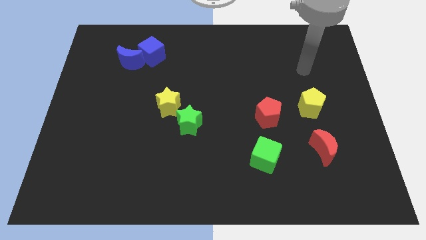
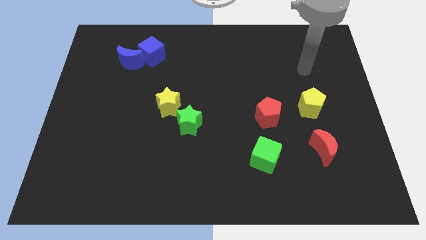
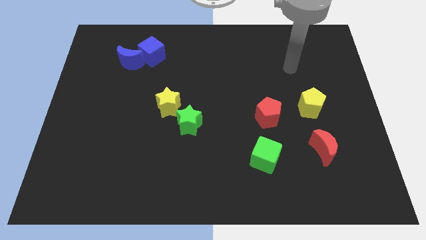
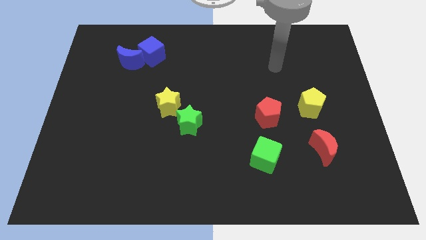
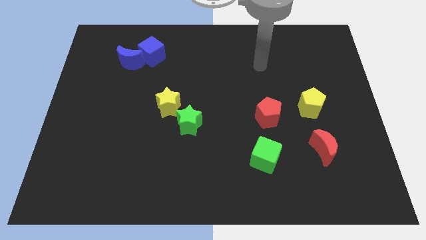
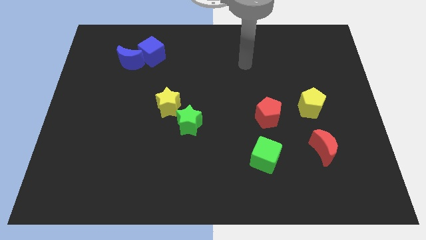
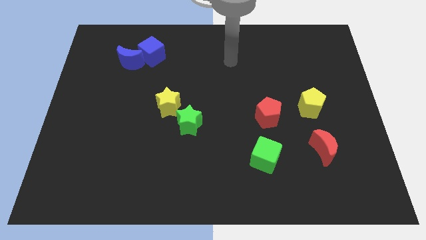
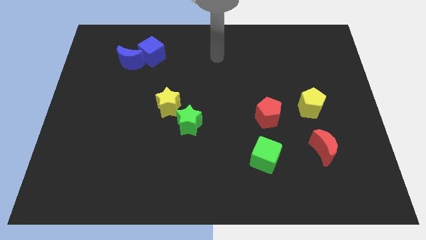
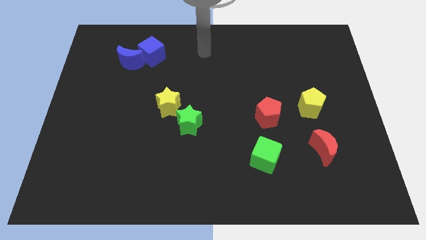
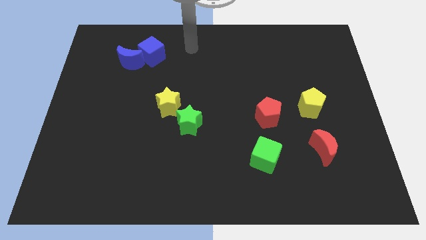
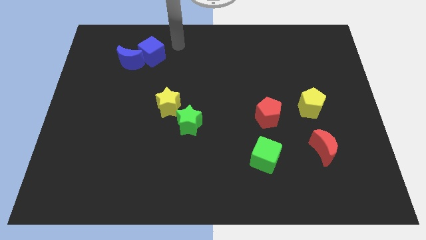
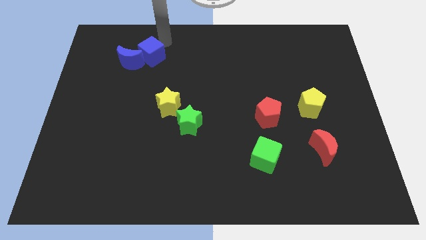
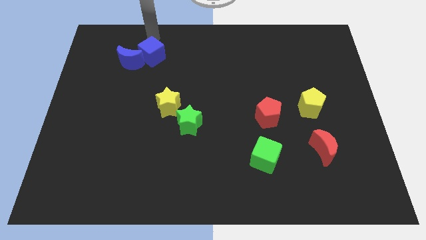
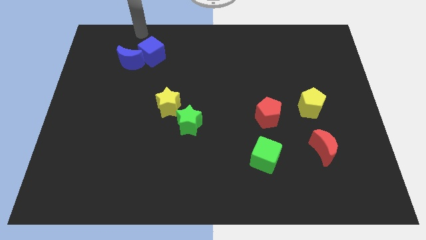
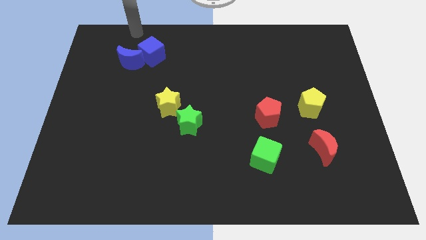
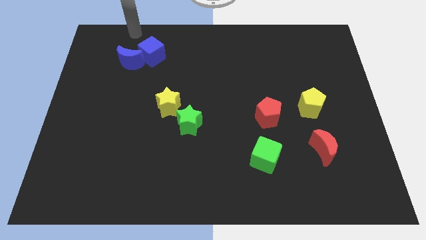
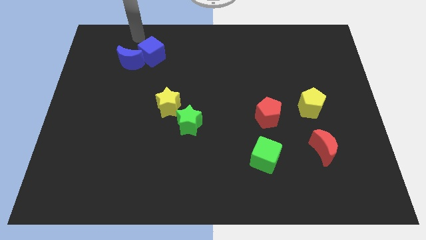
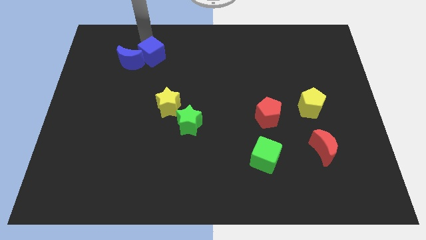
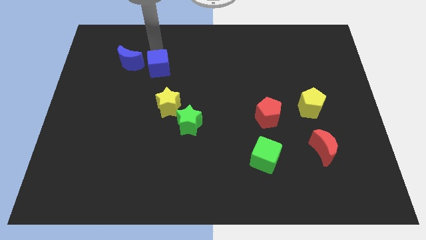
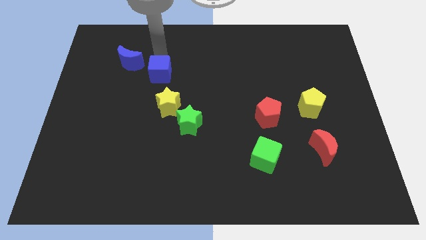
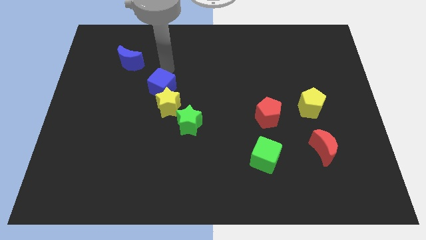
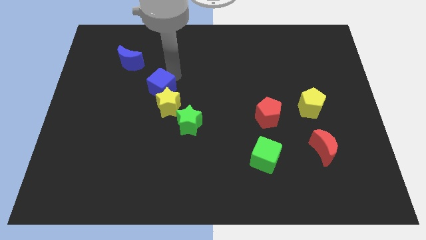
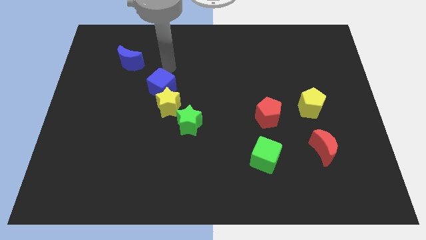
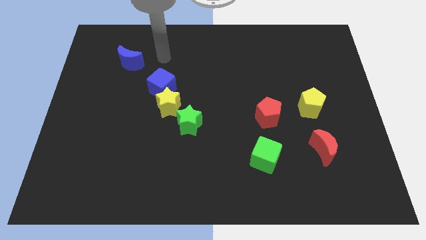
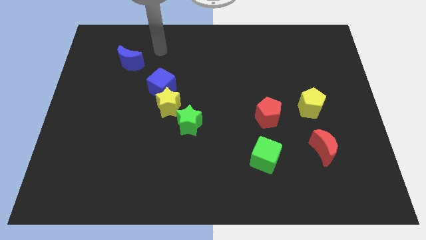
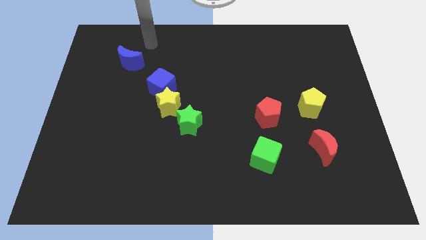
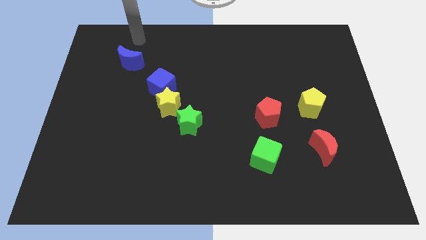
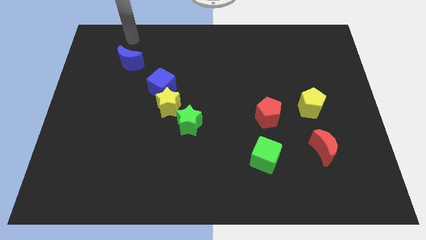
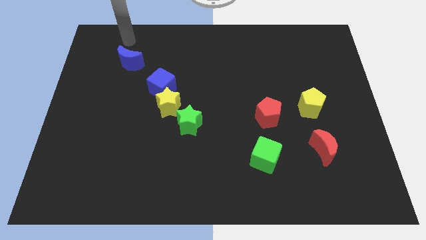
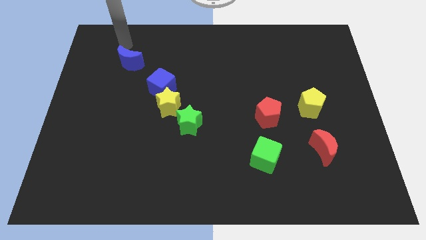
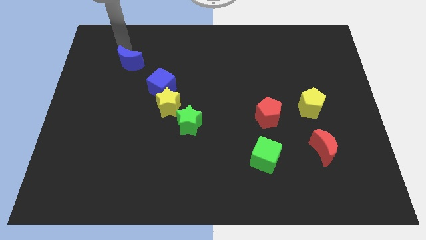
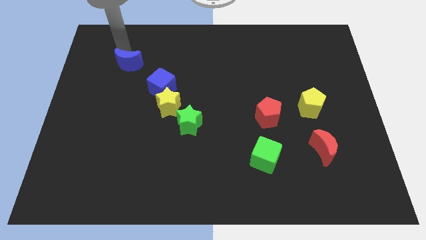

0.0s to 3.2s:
push blue cube towards yellow star

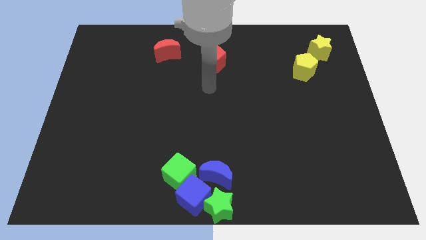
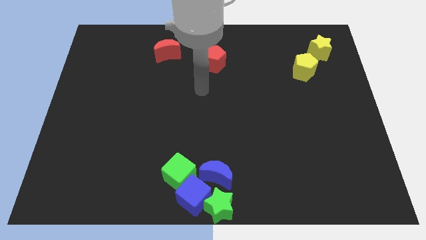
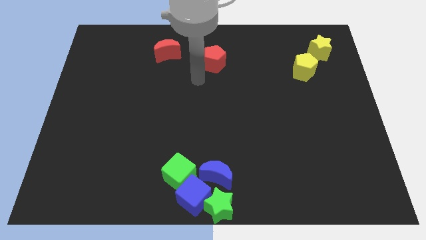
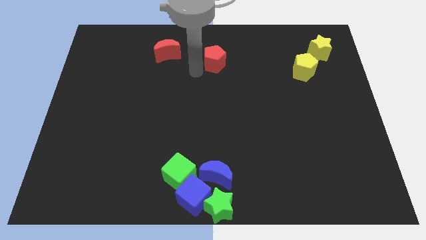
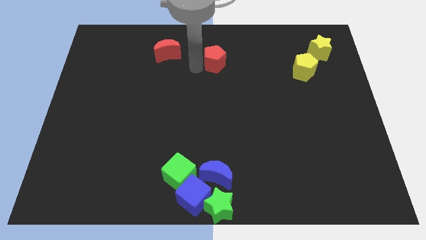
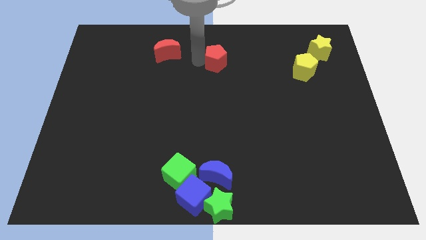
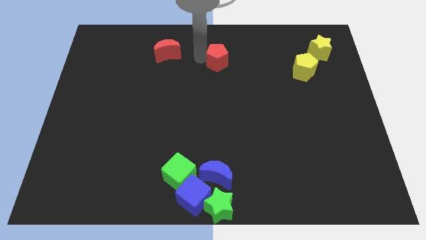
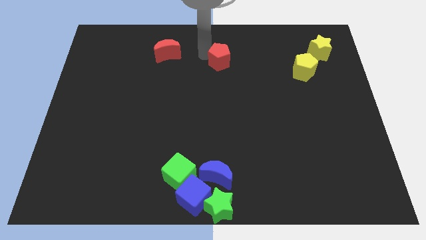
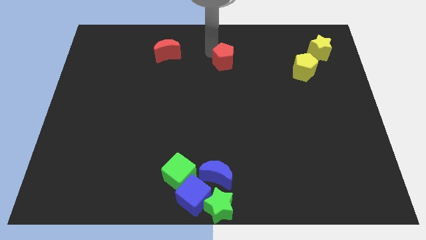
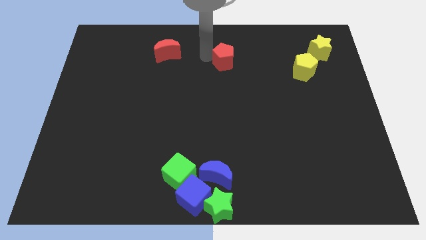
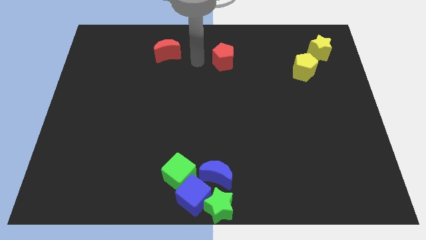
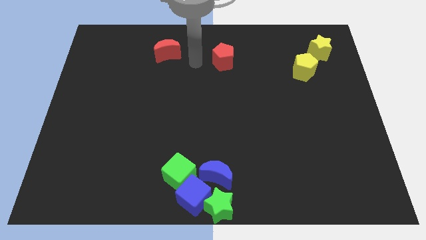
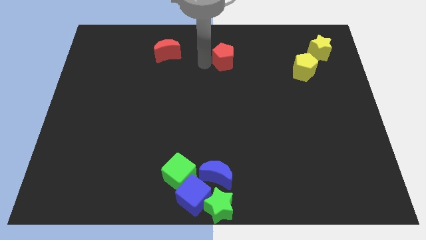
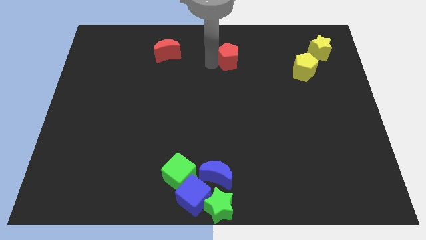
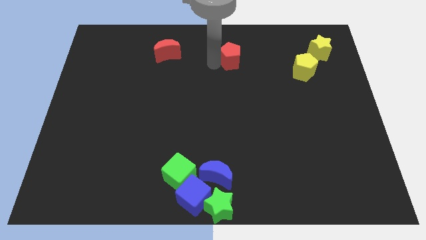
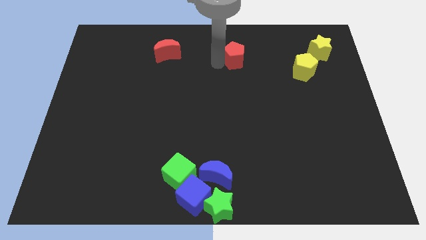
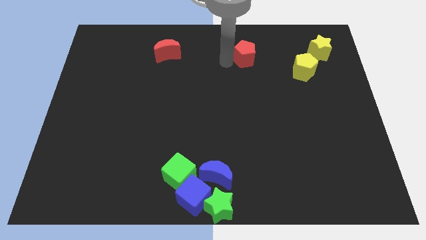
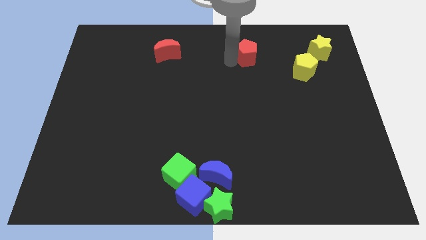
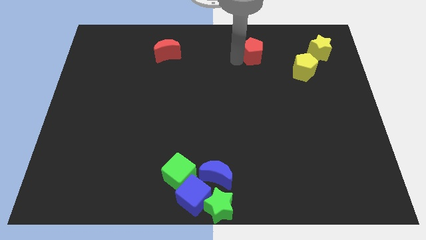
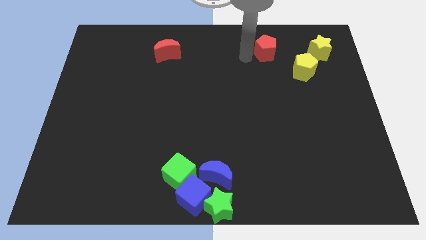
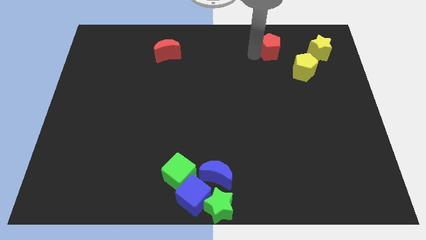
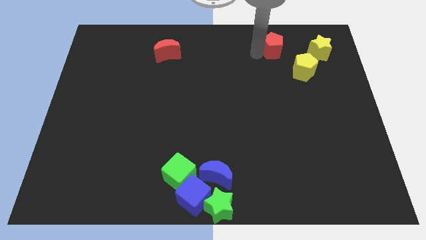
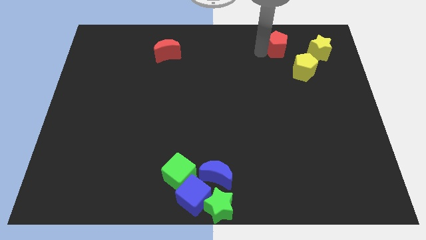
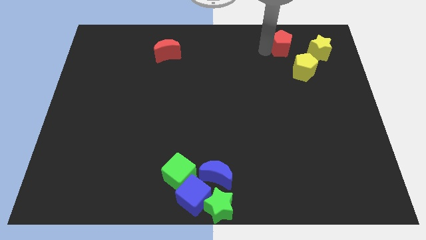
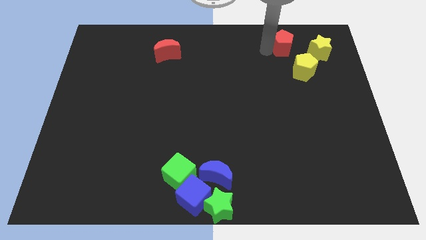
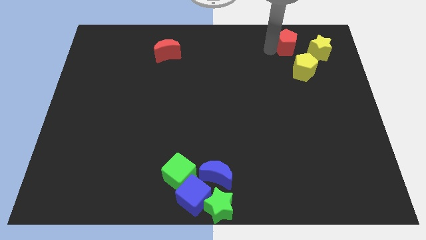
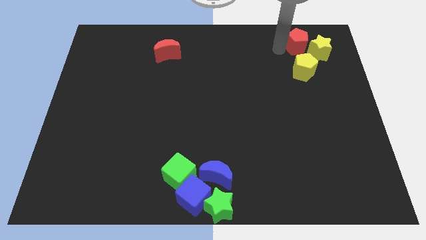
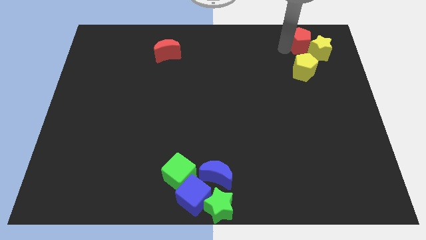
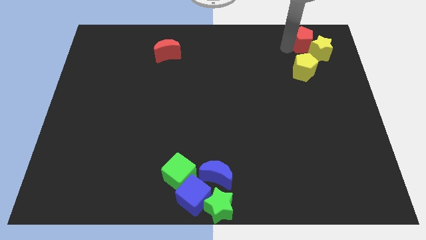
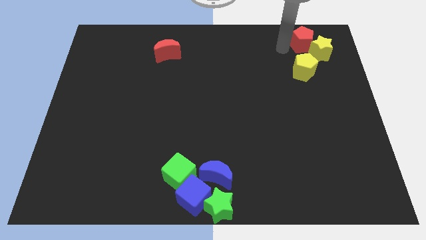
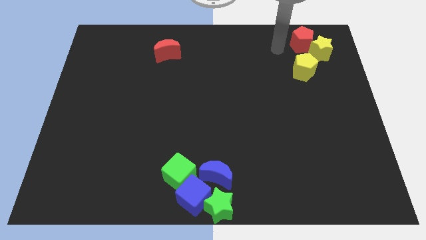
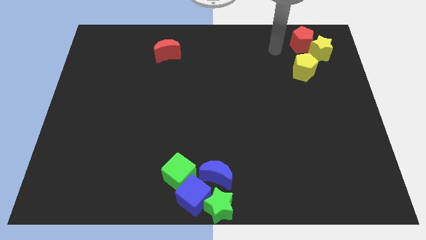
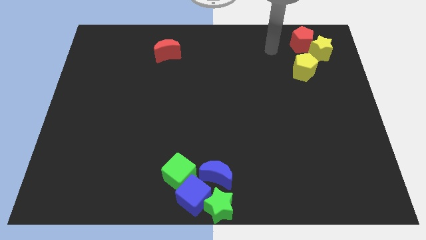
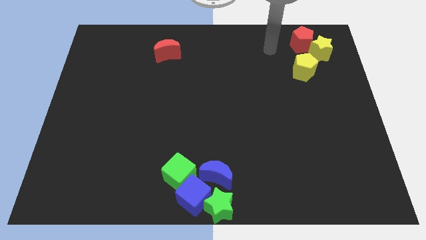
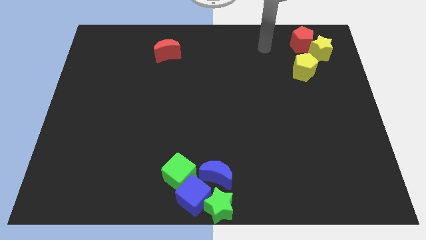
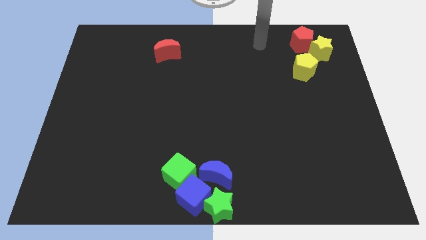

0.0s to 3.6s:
push the red pentagon to the left of the yellow star

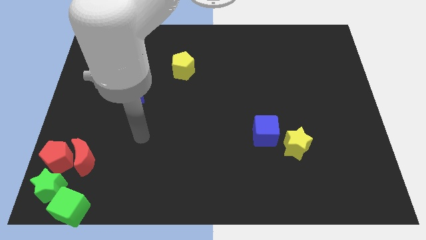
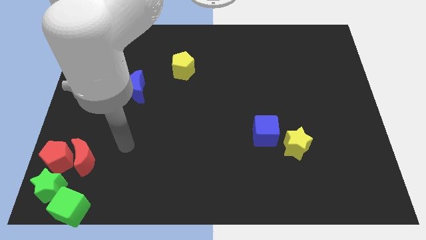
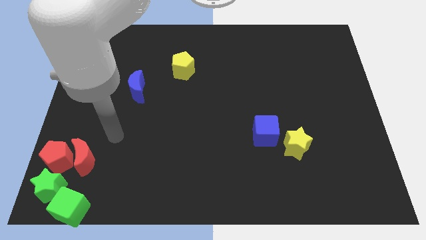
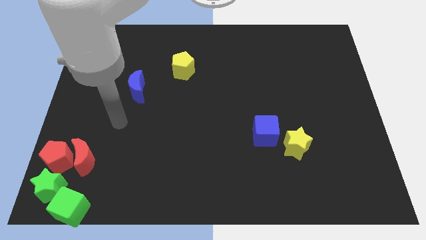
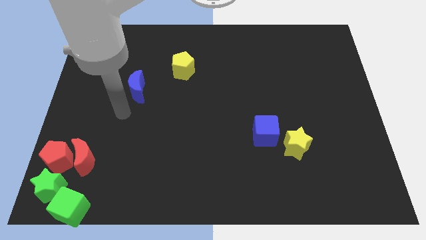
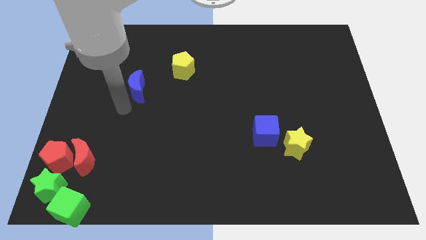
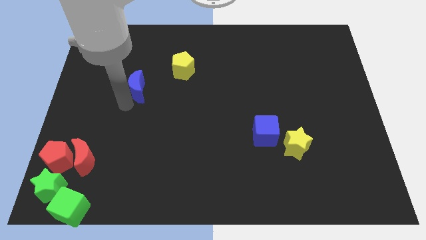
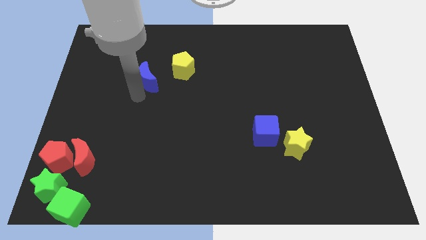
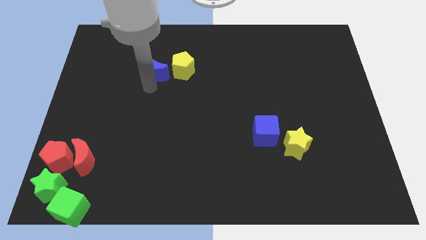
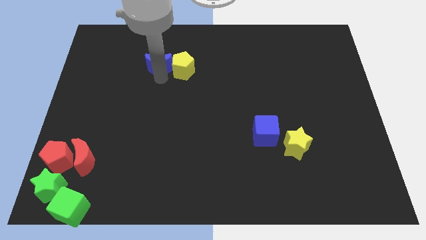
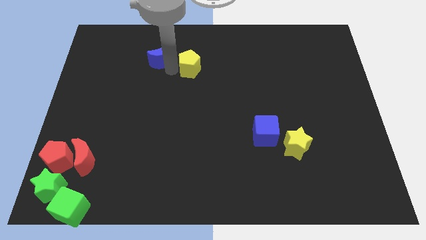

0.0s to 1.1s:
move the blue moon left to the yellow pentagon

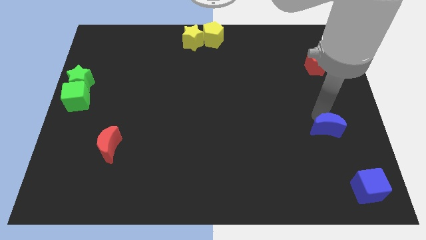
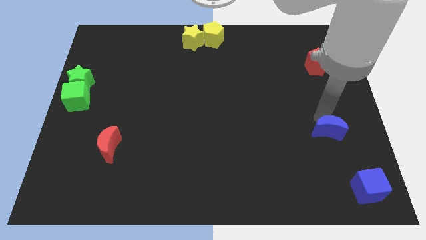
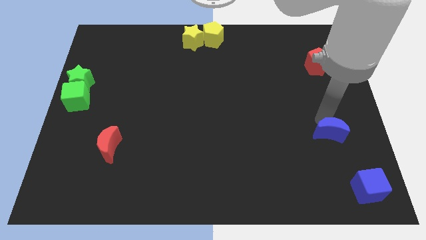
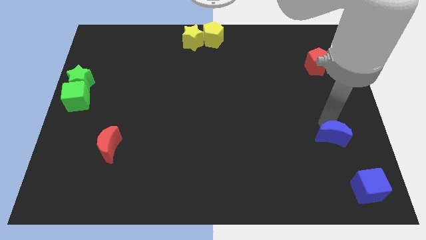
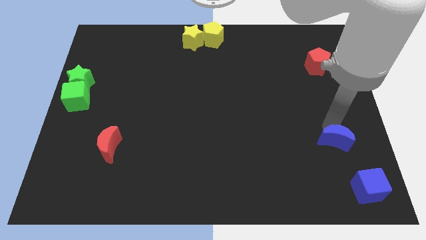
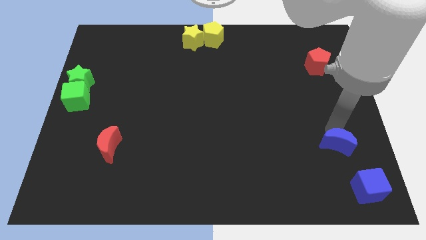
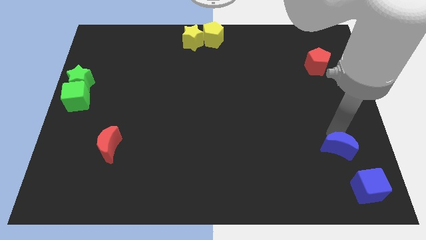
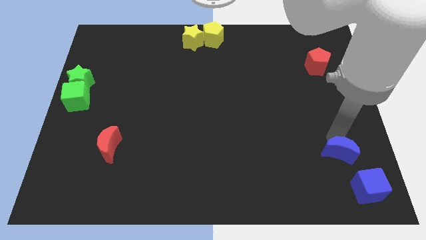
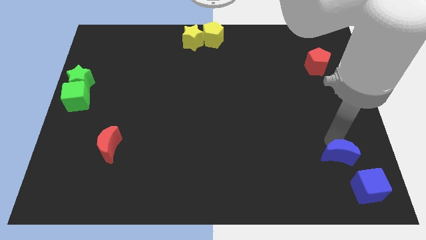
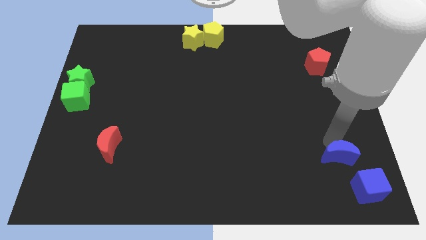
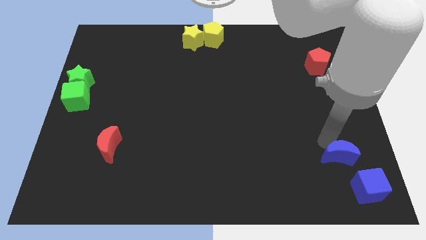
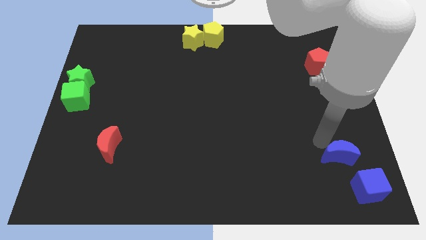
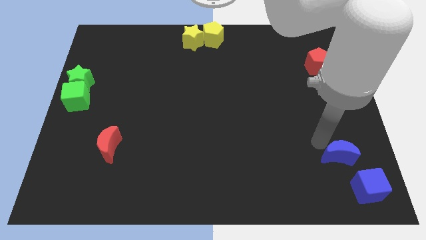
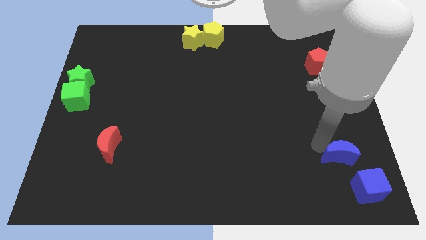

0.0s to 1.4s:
place the blue crescent above the blue cube
